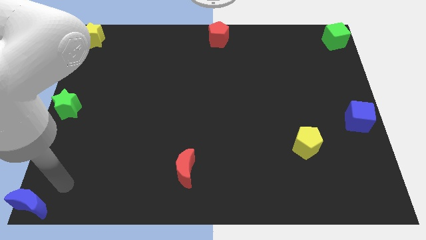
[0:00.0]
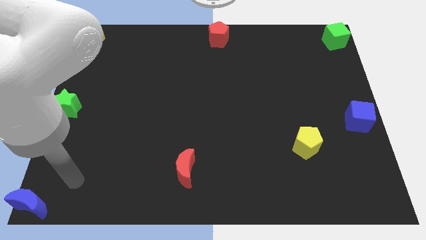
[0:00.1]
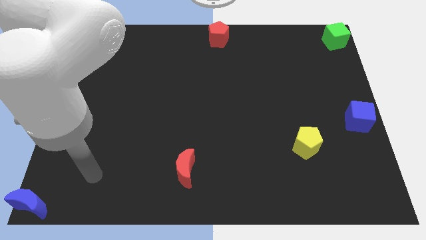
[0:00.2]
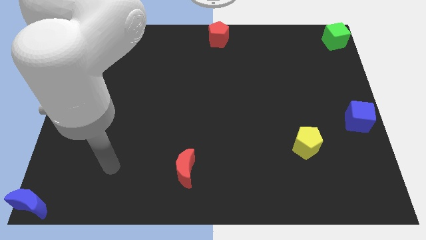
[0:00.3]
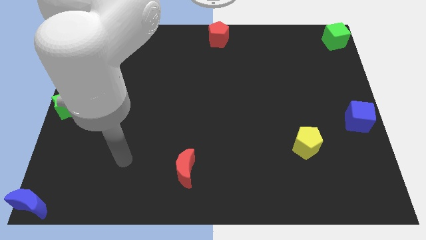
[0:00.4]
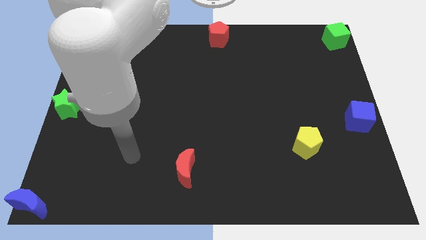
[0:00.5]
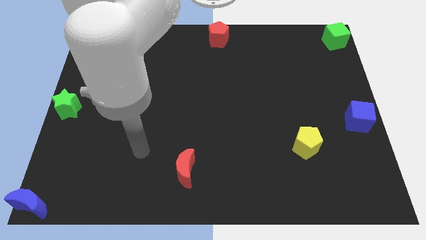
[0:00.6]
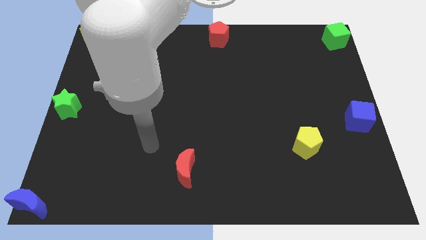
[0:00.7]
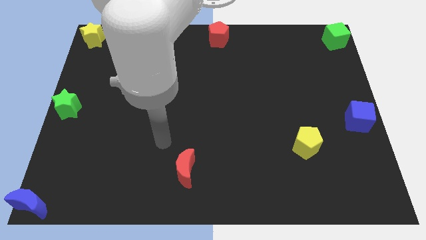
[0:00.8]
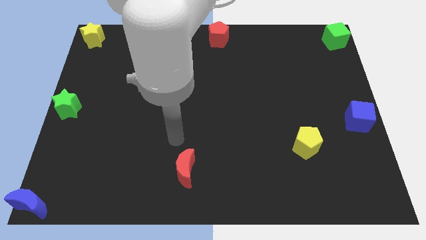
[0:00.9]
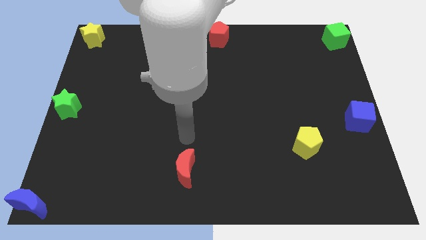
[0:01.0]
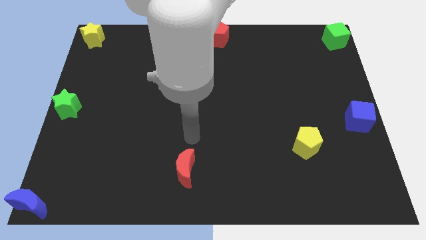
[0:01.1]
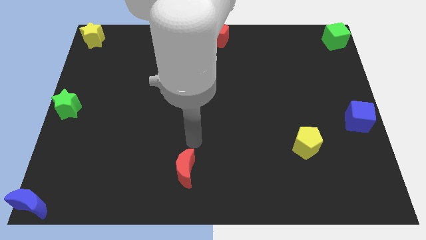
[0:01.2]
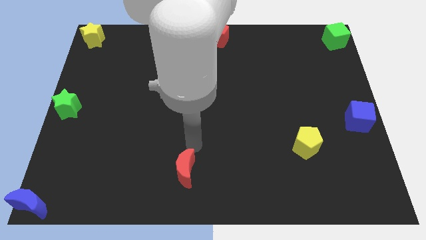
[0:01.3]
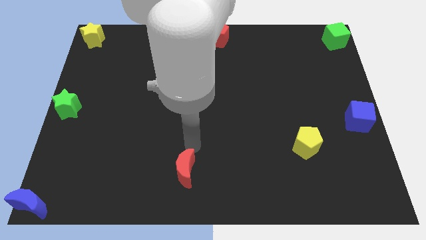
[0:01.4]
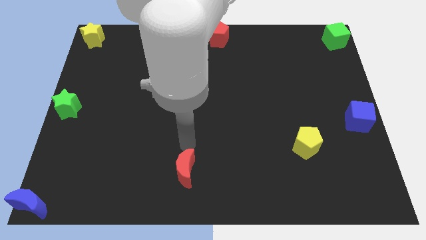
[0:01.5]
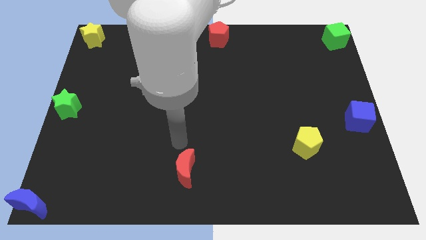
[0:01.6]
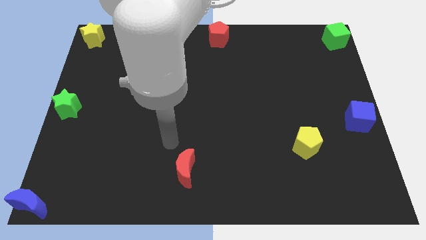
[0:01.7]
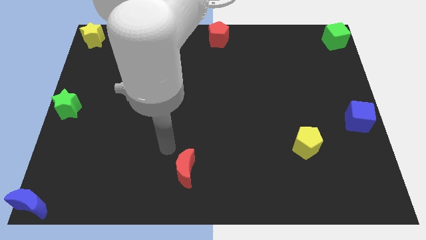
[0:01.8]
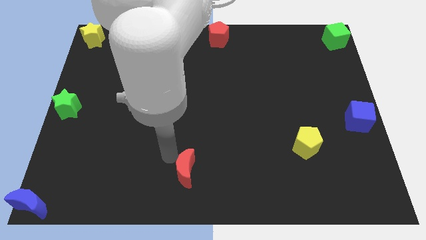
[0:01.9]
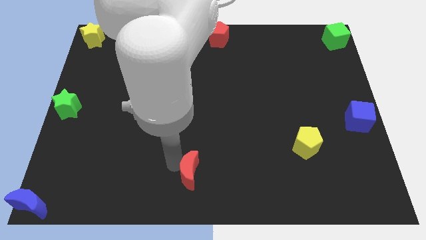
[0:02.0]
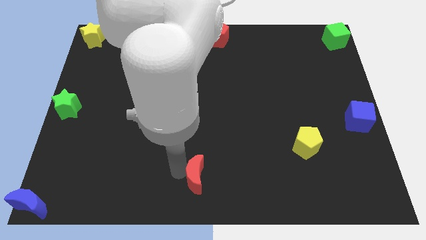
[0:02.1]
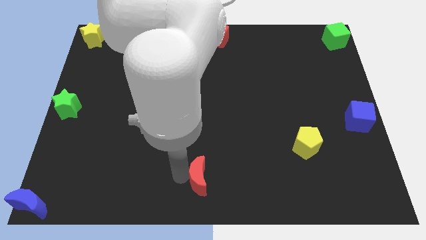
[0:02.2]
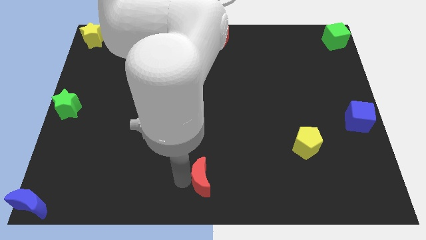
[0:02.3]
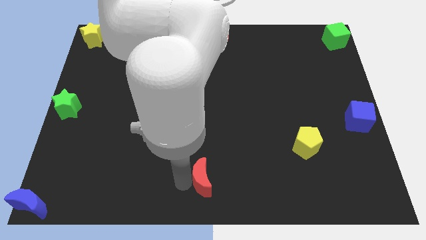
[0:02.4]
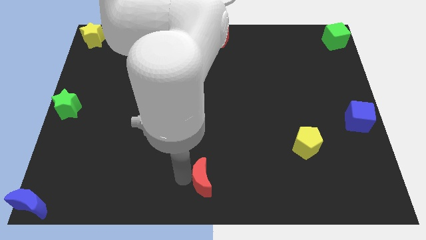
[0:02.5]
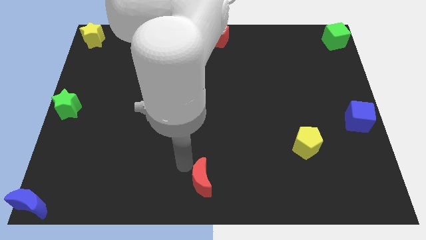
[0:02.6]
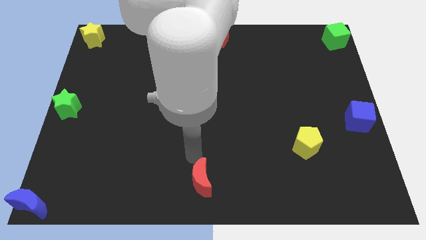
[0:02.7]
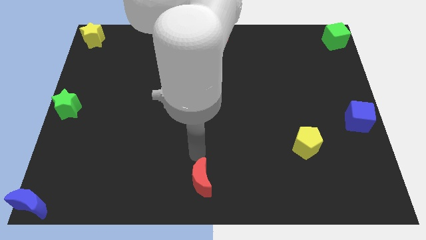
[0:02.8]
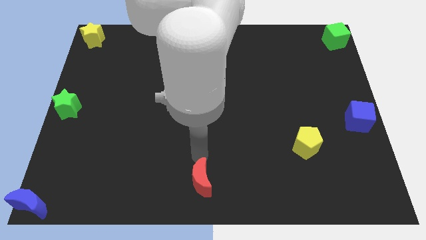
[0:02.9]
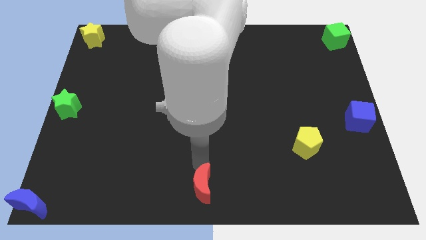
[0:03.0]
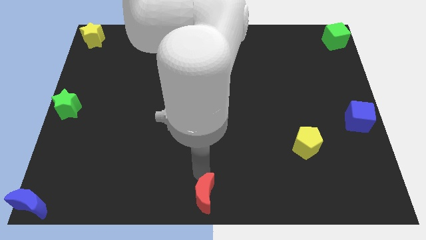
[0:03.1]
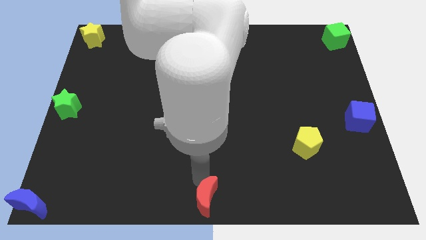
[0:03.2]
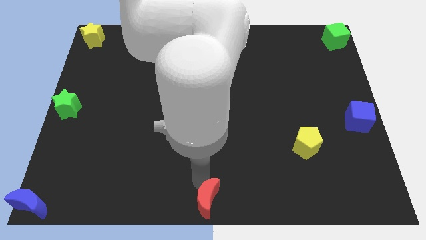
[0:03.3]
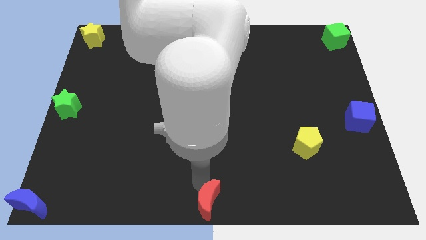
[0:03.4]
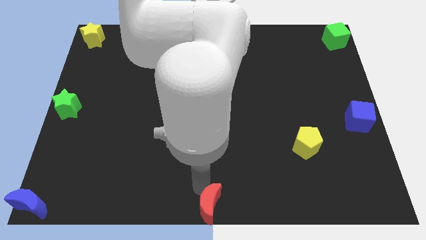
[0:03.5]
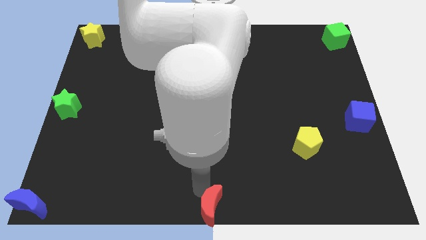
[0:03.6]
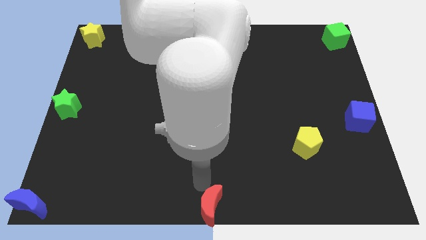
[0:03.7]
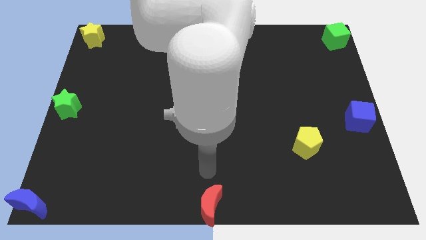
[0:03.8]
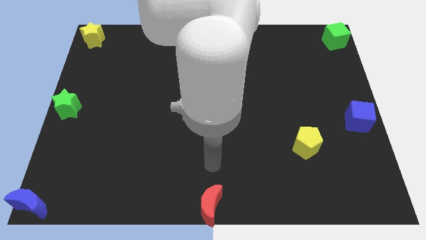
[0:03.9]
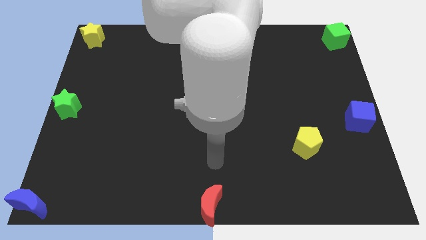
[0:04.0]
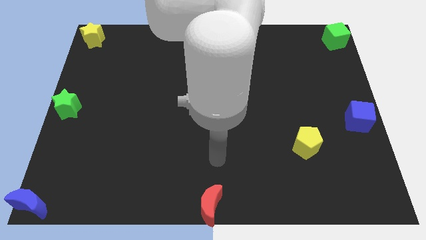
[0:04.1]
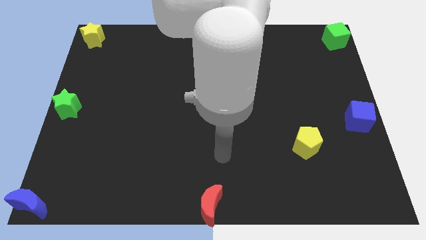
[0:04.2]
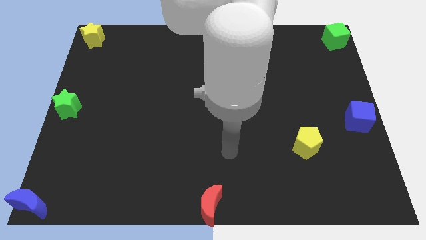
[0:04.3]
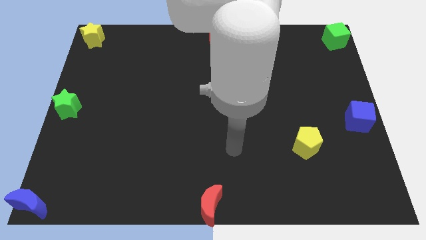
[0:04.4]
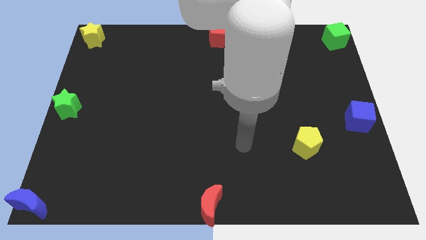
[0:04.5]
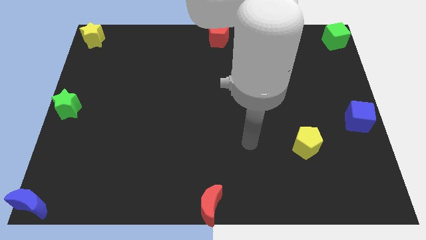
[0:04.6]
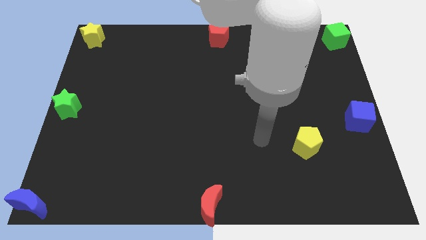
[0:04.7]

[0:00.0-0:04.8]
move the red moon to the bottom center of the board

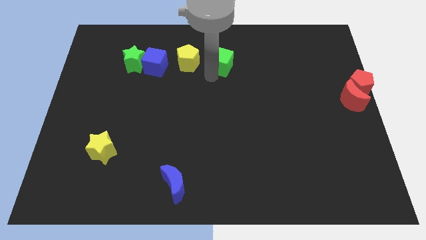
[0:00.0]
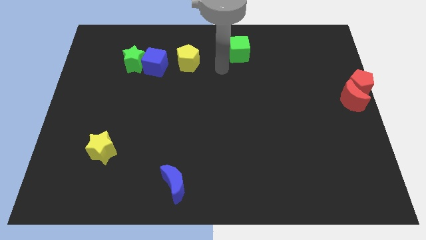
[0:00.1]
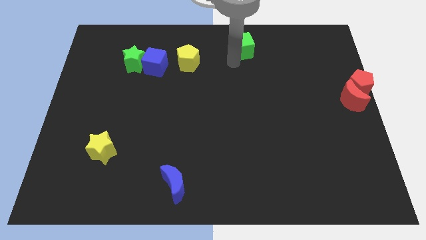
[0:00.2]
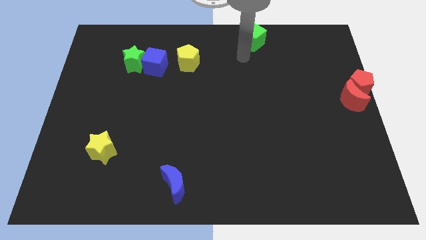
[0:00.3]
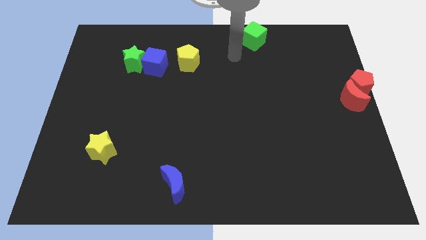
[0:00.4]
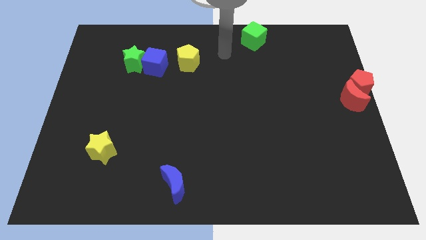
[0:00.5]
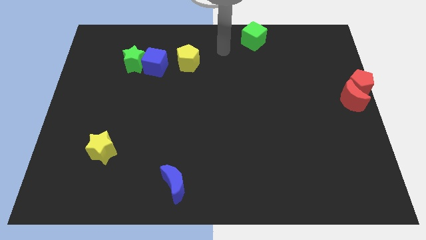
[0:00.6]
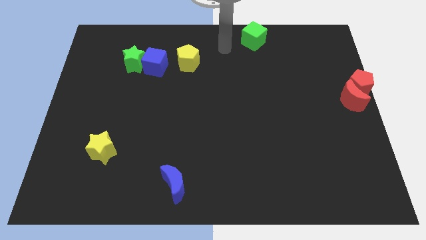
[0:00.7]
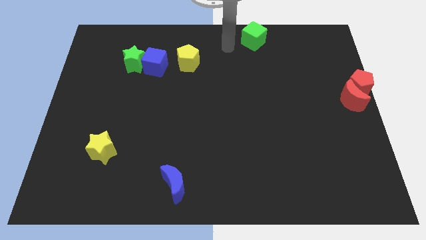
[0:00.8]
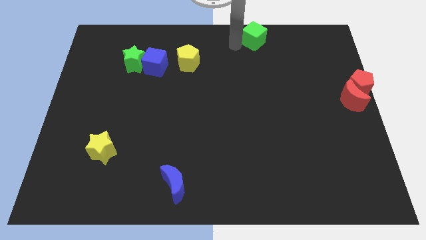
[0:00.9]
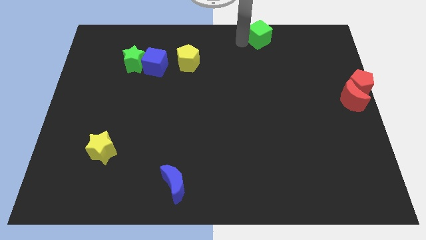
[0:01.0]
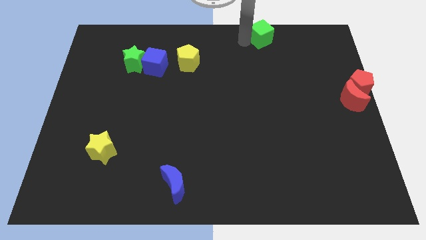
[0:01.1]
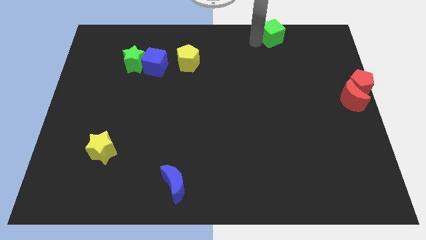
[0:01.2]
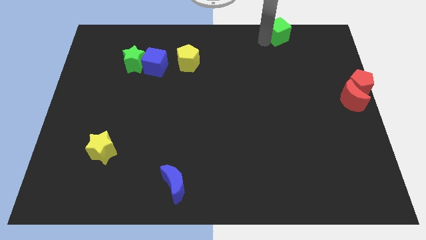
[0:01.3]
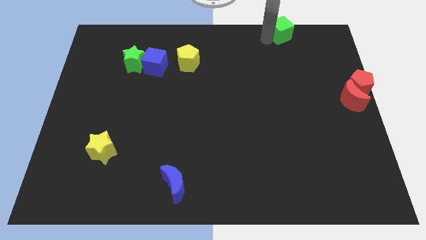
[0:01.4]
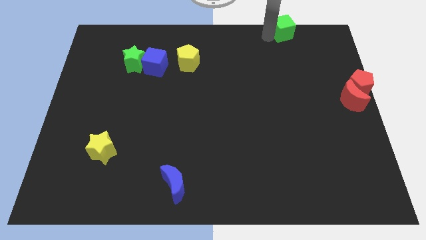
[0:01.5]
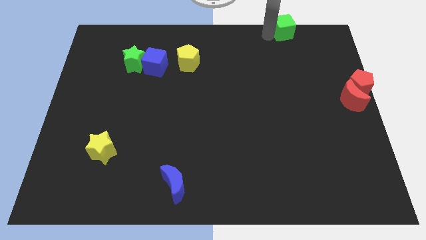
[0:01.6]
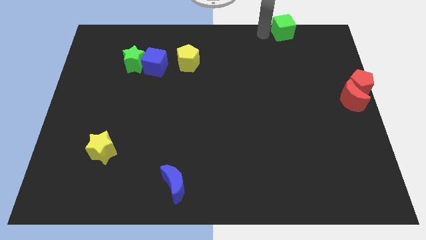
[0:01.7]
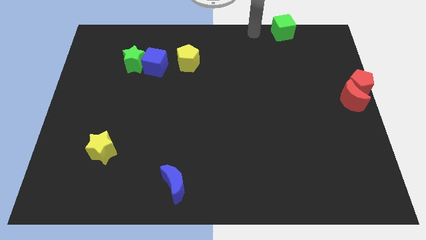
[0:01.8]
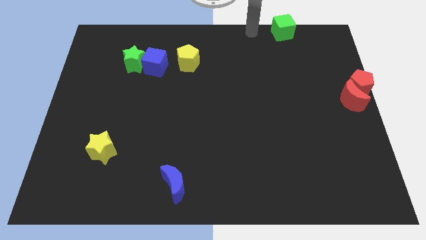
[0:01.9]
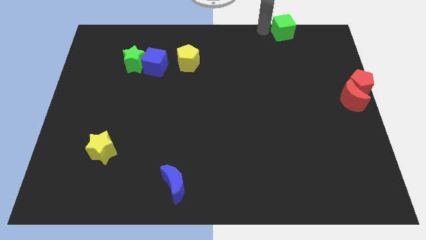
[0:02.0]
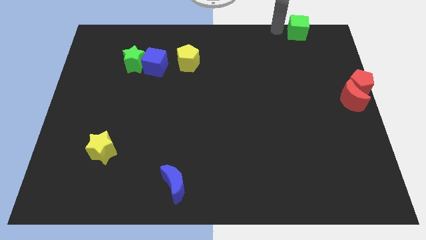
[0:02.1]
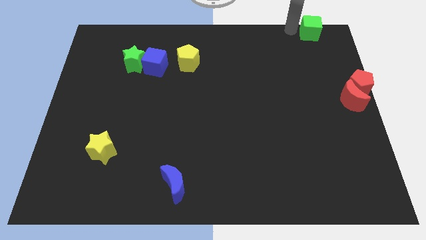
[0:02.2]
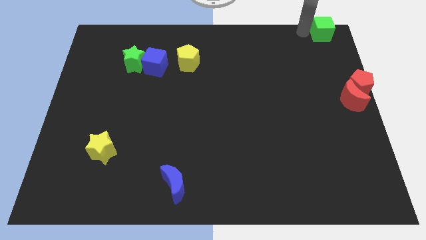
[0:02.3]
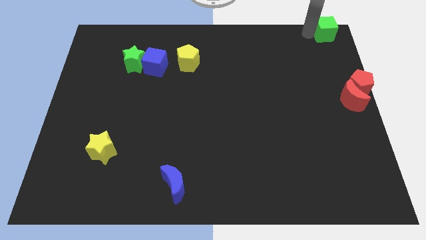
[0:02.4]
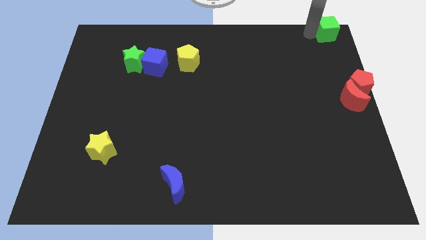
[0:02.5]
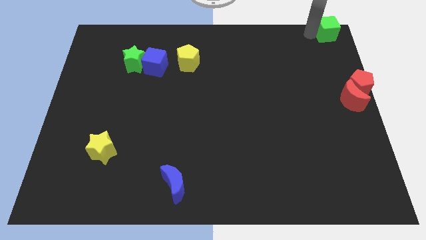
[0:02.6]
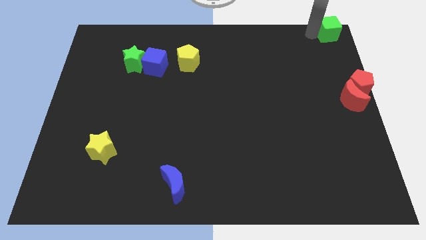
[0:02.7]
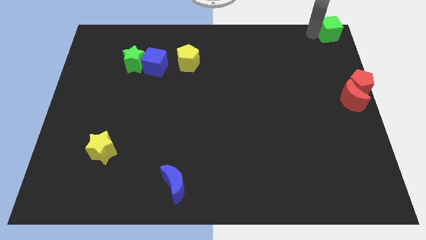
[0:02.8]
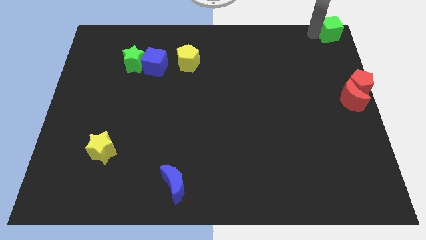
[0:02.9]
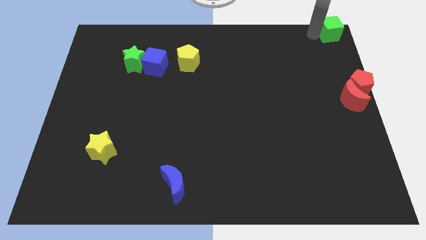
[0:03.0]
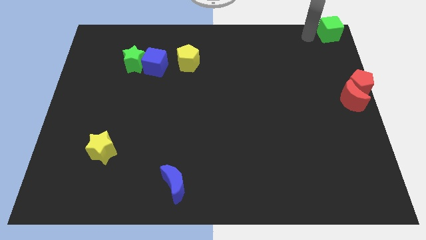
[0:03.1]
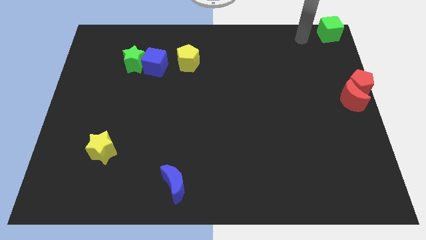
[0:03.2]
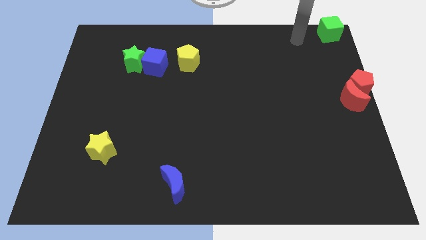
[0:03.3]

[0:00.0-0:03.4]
drag the green cube to the top right corner of the board

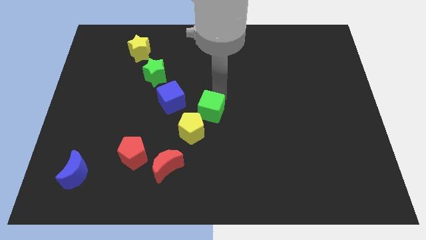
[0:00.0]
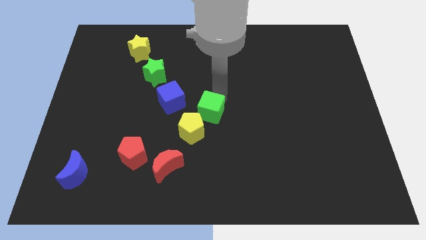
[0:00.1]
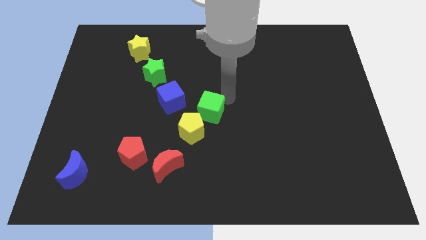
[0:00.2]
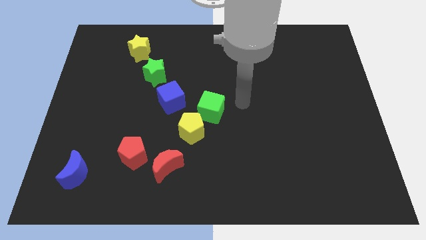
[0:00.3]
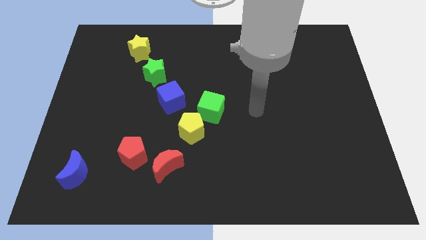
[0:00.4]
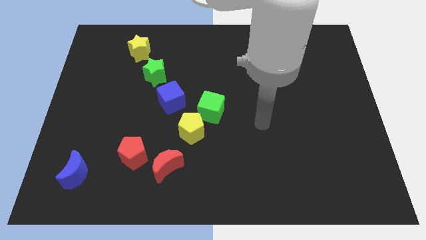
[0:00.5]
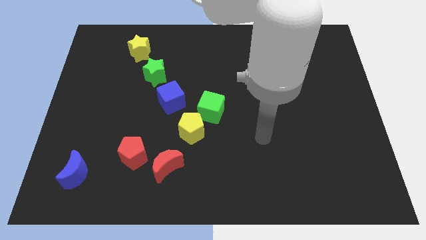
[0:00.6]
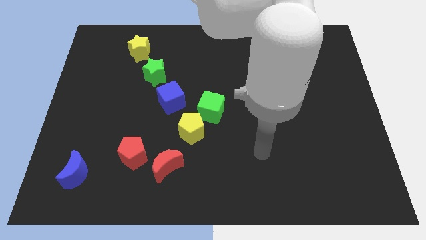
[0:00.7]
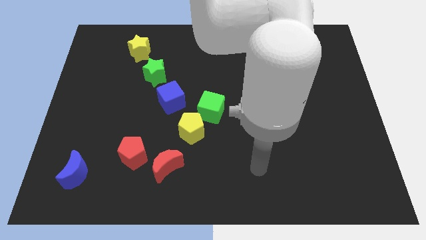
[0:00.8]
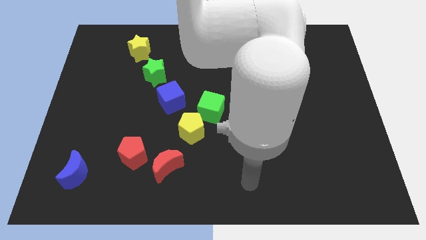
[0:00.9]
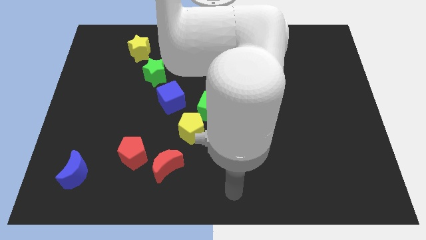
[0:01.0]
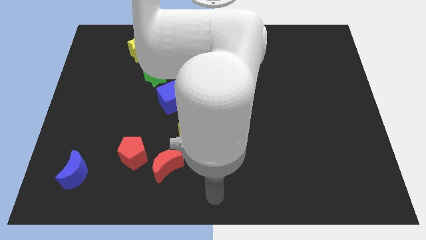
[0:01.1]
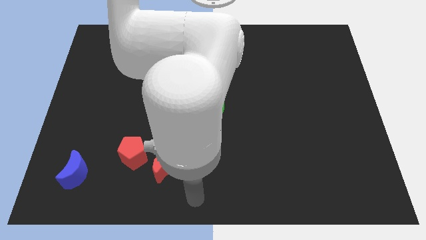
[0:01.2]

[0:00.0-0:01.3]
move your arm away from the green cube
